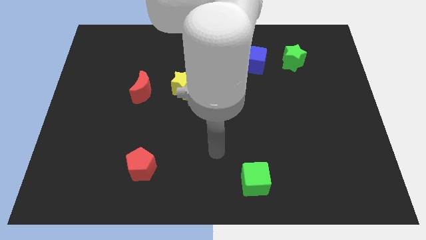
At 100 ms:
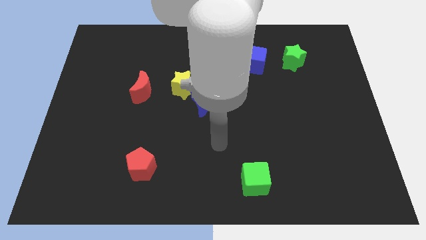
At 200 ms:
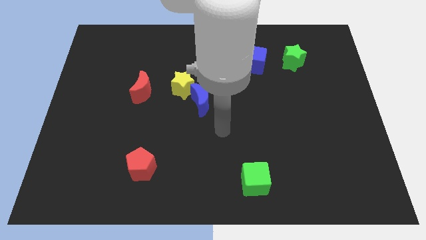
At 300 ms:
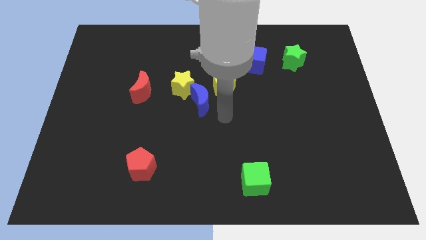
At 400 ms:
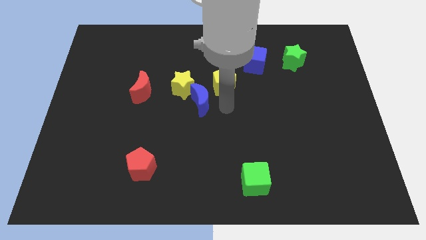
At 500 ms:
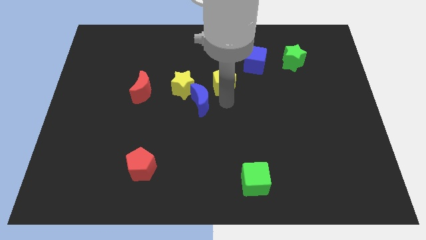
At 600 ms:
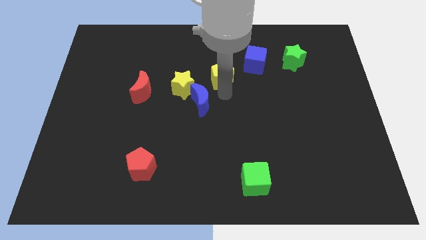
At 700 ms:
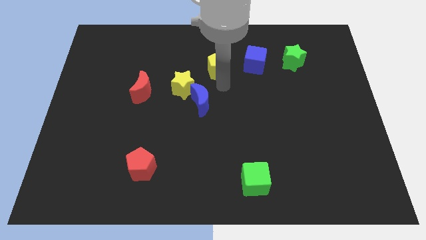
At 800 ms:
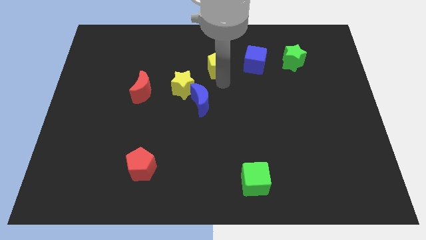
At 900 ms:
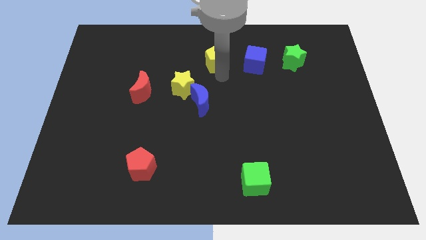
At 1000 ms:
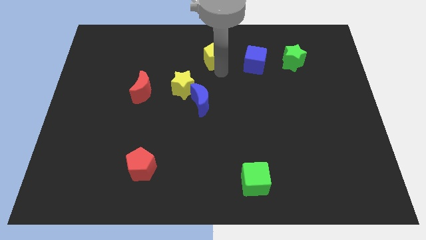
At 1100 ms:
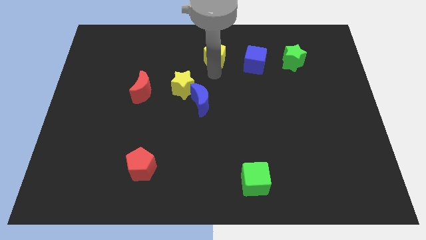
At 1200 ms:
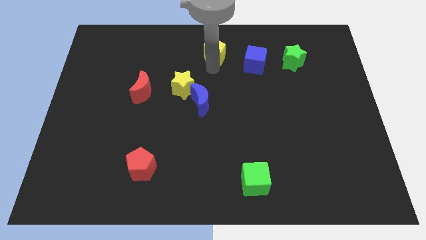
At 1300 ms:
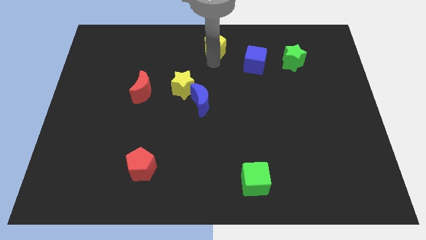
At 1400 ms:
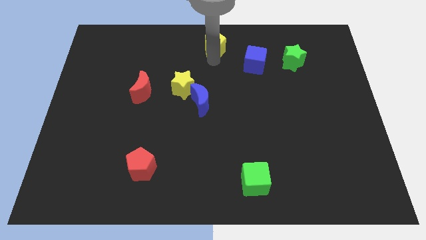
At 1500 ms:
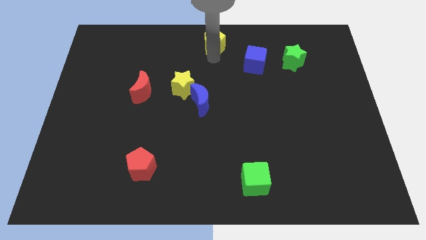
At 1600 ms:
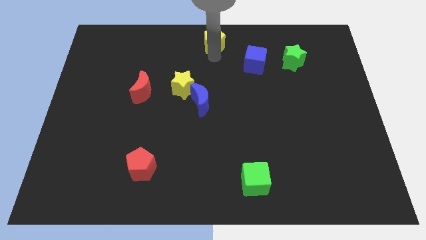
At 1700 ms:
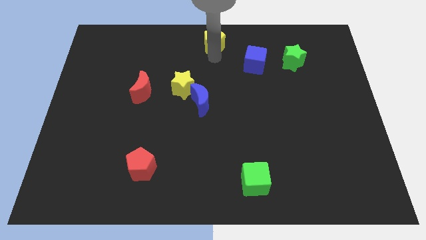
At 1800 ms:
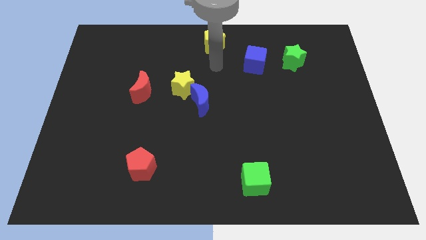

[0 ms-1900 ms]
move the yellow pentagon to the top side

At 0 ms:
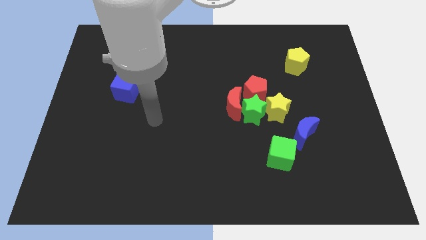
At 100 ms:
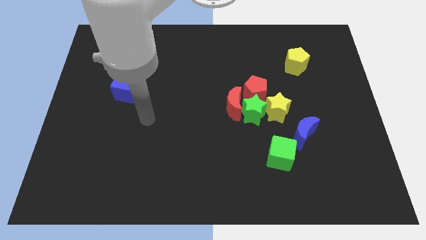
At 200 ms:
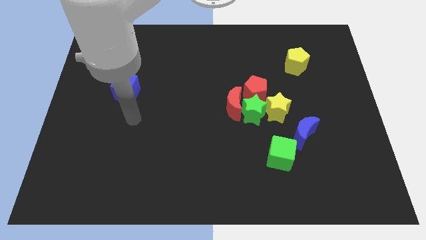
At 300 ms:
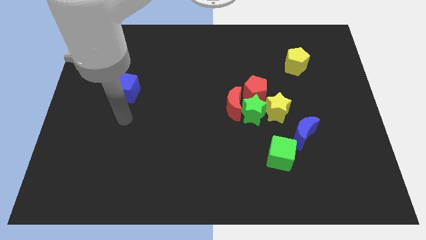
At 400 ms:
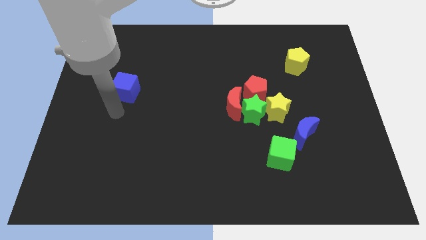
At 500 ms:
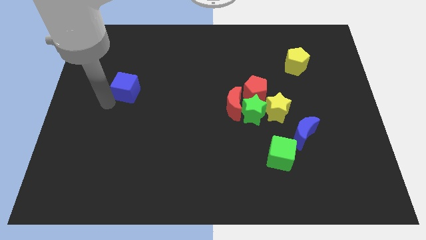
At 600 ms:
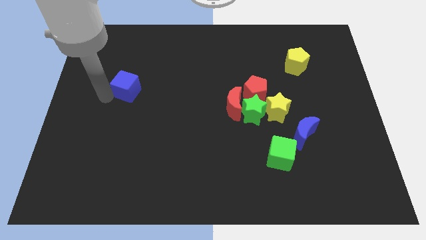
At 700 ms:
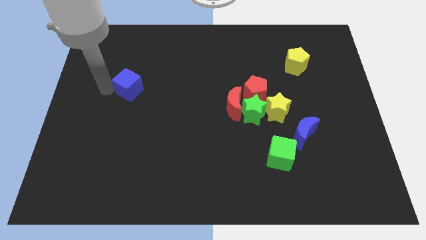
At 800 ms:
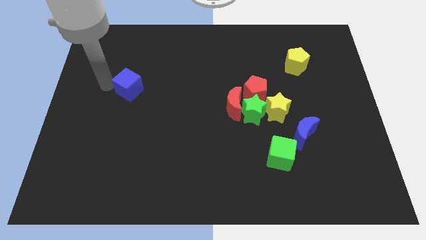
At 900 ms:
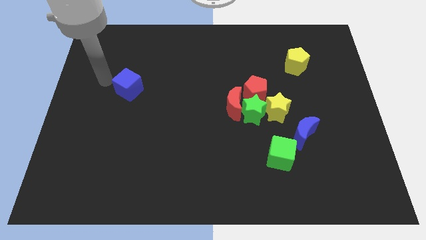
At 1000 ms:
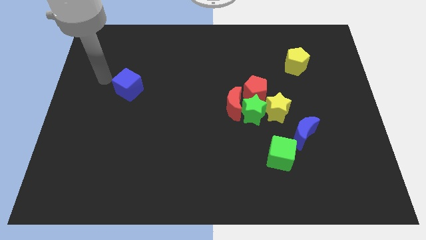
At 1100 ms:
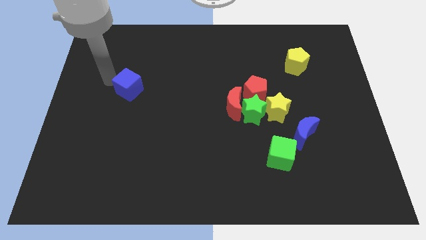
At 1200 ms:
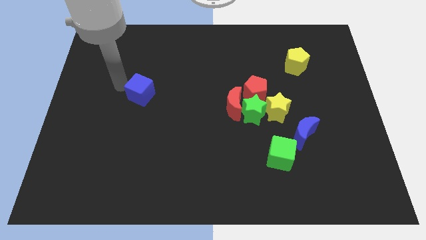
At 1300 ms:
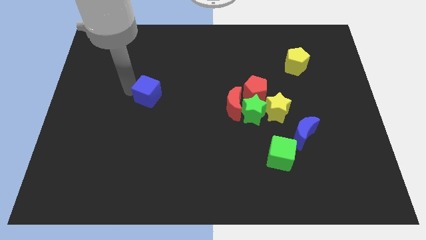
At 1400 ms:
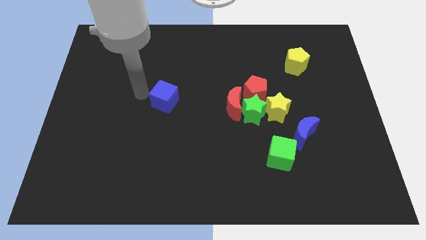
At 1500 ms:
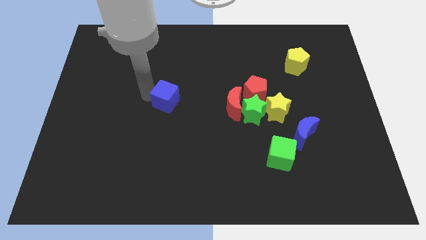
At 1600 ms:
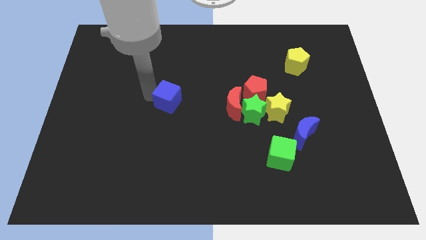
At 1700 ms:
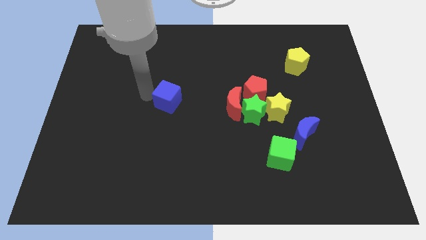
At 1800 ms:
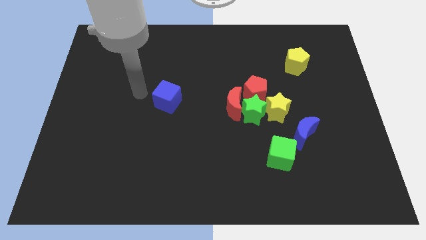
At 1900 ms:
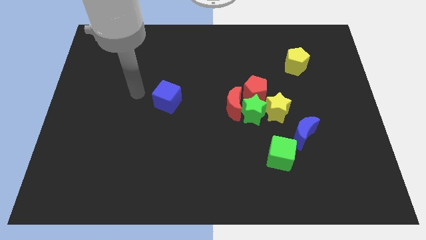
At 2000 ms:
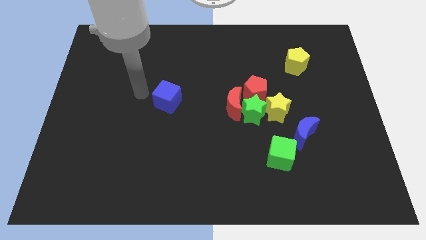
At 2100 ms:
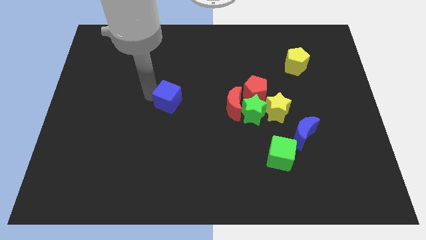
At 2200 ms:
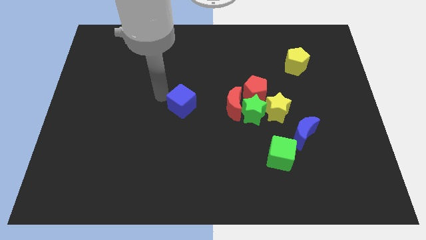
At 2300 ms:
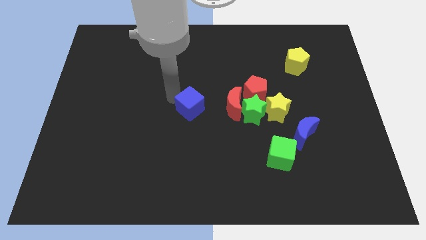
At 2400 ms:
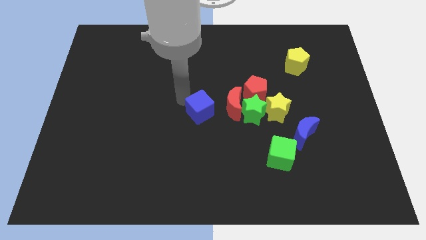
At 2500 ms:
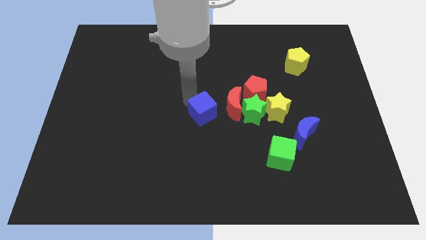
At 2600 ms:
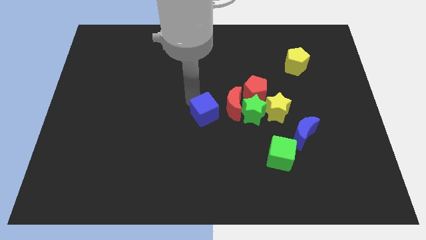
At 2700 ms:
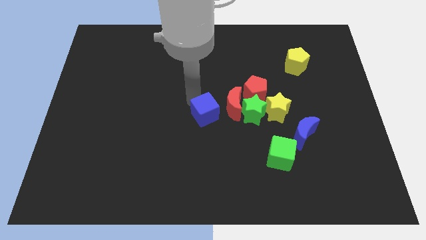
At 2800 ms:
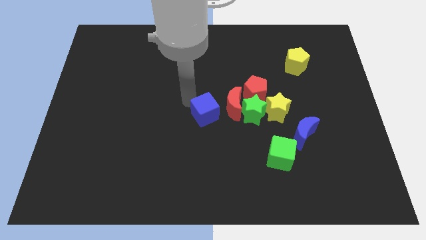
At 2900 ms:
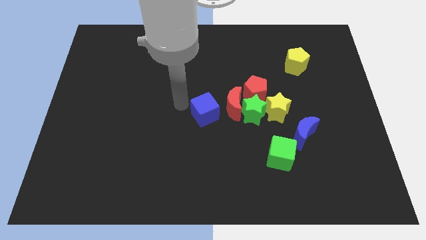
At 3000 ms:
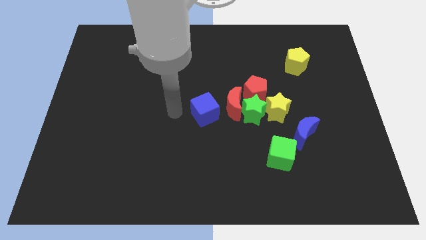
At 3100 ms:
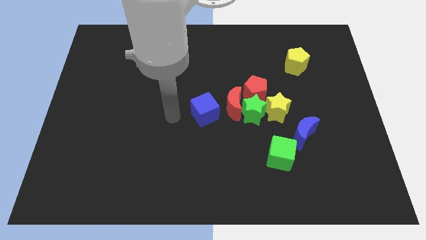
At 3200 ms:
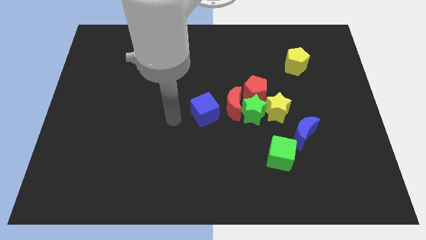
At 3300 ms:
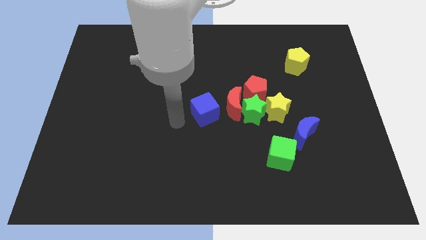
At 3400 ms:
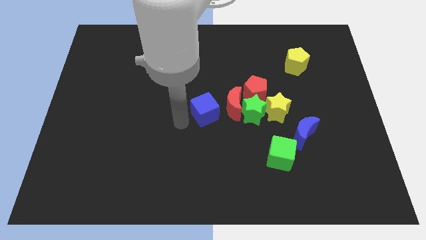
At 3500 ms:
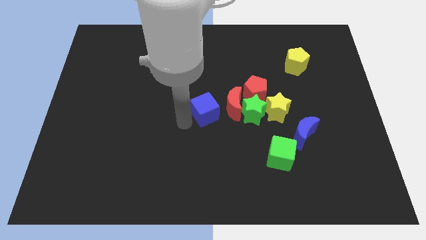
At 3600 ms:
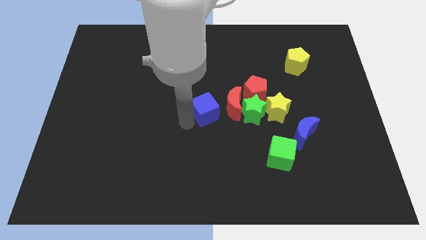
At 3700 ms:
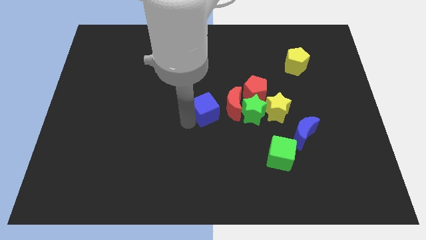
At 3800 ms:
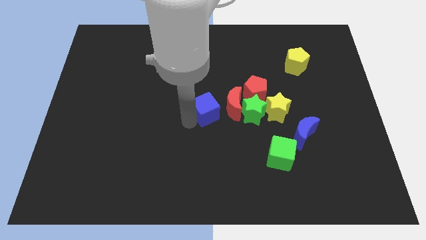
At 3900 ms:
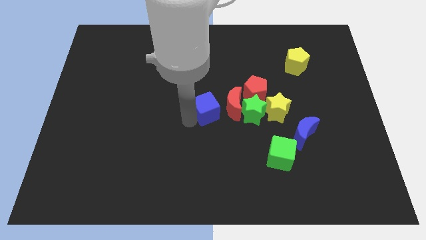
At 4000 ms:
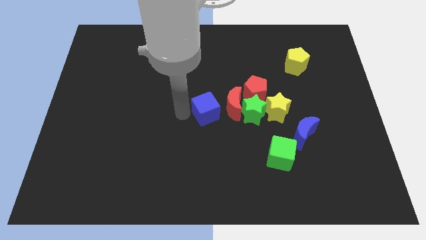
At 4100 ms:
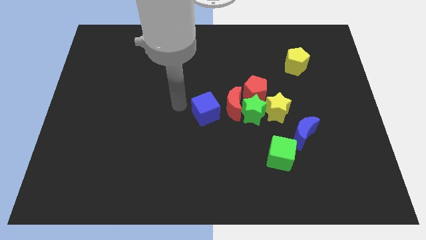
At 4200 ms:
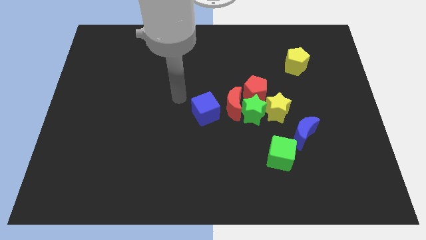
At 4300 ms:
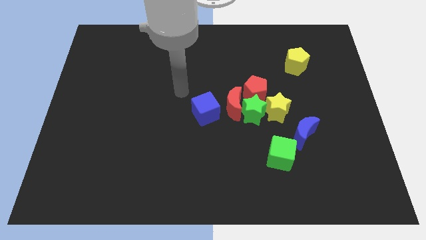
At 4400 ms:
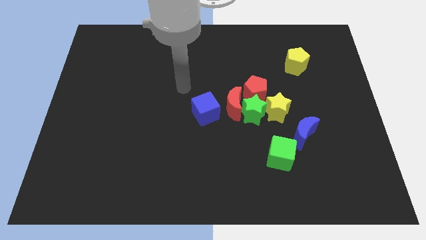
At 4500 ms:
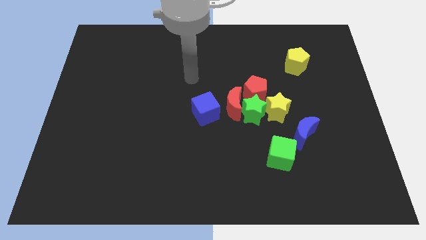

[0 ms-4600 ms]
move the blue cube towards the red crescent

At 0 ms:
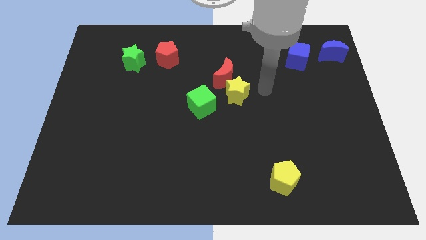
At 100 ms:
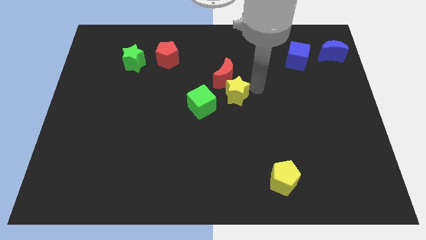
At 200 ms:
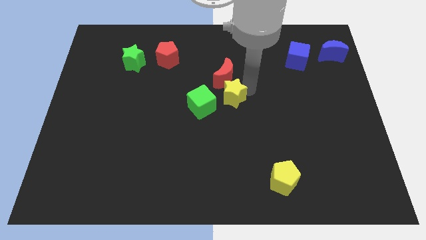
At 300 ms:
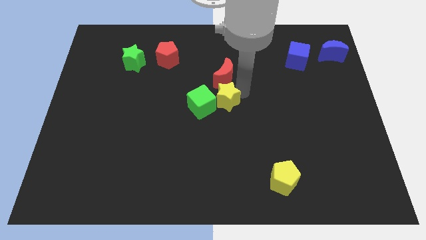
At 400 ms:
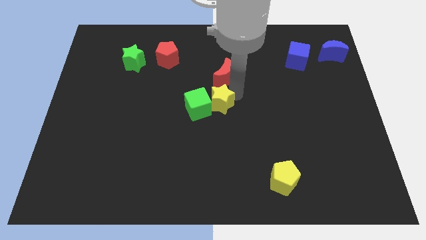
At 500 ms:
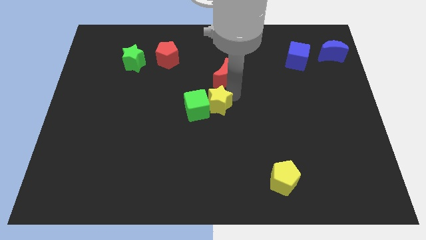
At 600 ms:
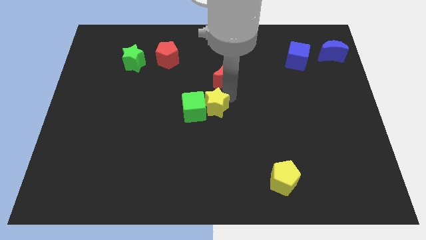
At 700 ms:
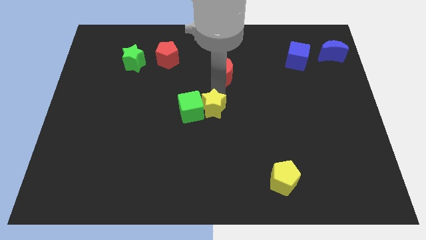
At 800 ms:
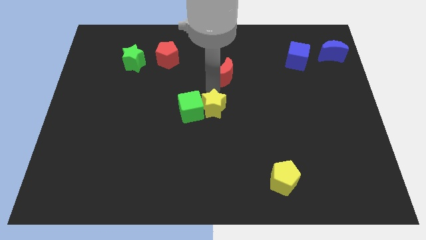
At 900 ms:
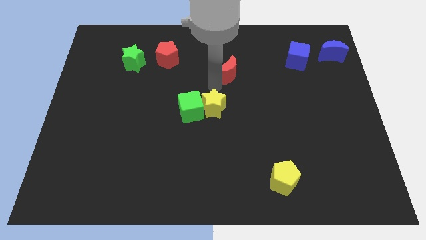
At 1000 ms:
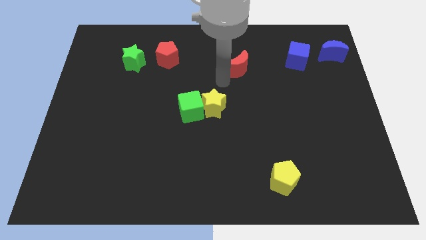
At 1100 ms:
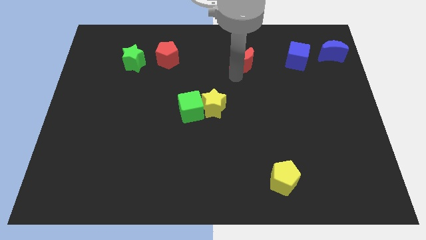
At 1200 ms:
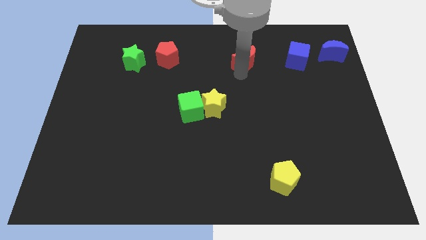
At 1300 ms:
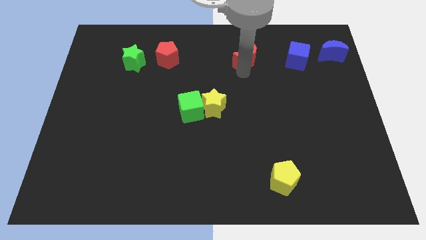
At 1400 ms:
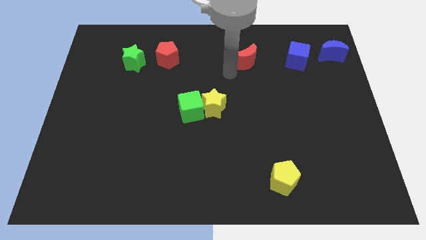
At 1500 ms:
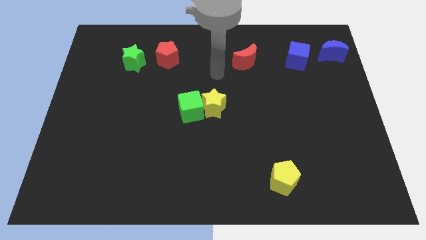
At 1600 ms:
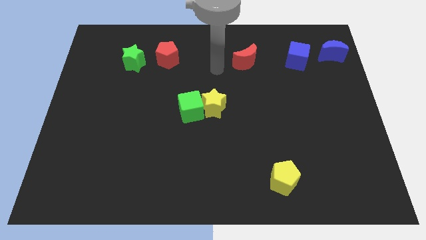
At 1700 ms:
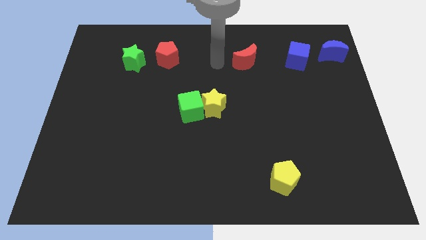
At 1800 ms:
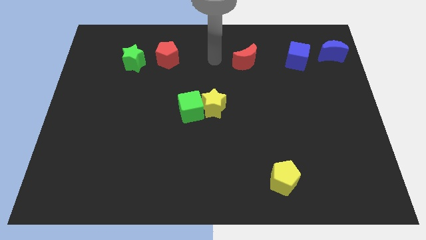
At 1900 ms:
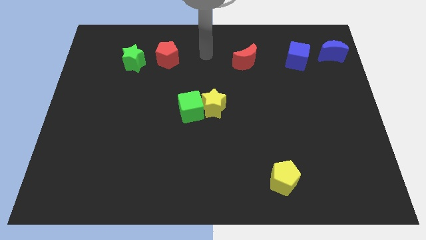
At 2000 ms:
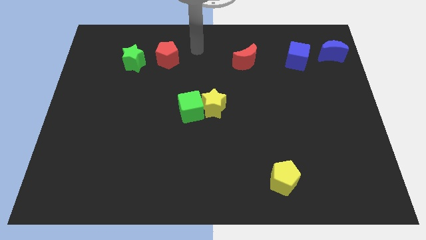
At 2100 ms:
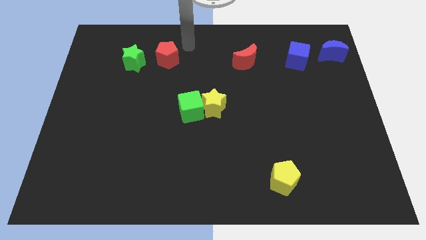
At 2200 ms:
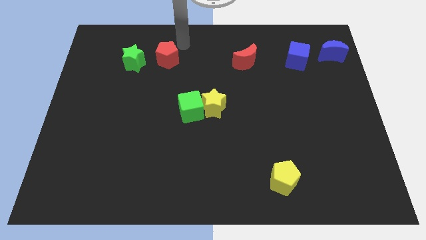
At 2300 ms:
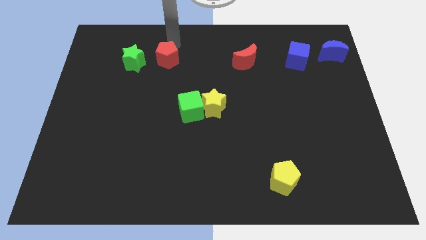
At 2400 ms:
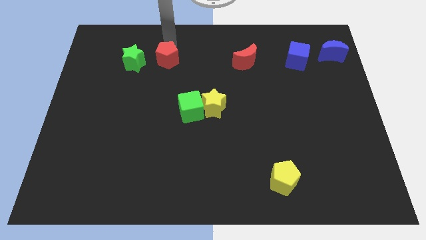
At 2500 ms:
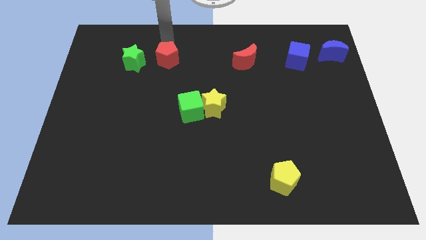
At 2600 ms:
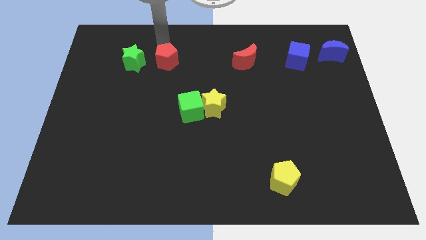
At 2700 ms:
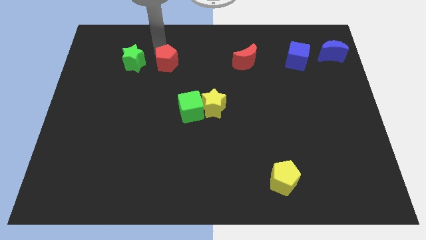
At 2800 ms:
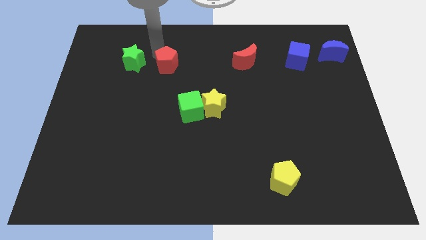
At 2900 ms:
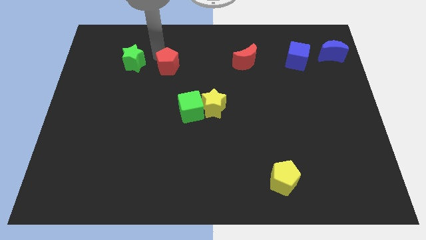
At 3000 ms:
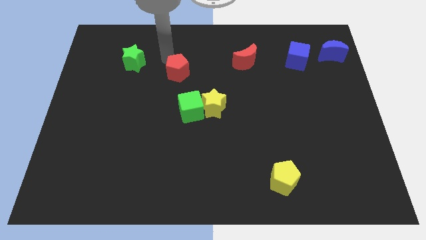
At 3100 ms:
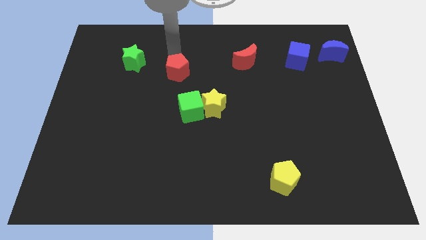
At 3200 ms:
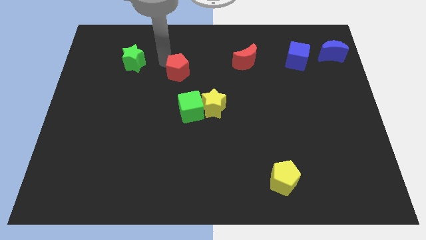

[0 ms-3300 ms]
push the yellow pentagon into the green square push the red moon slightly towards up and move the red pentagon towards center of the board
